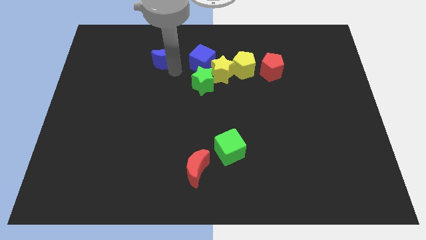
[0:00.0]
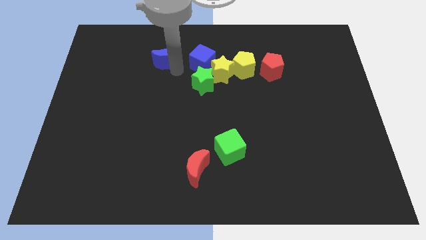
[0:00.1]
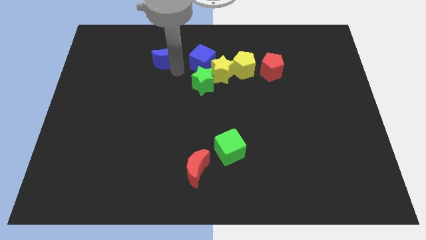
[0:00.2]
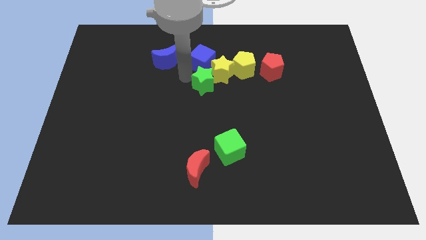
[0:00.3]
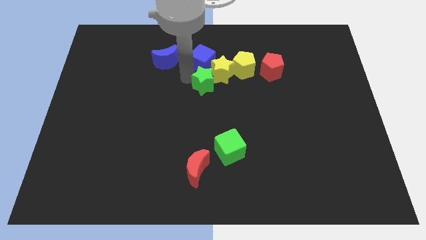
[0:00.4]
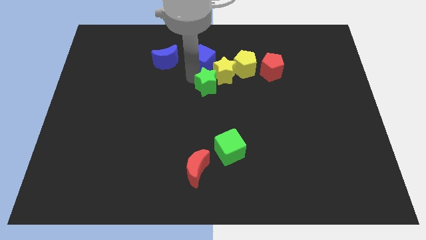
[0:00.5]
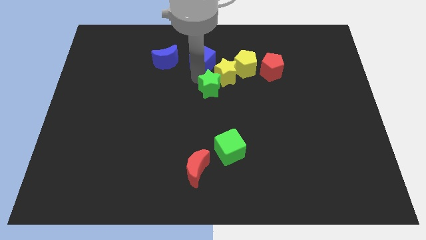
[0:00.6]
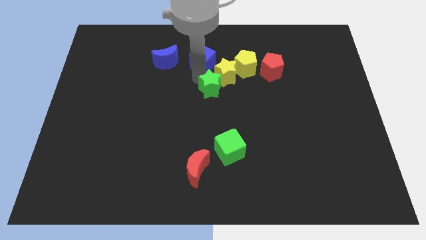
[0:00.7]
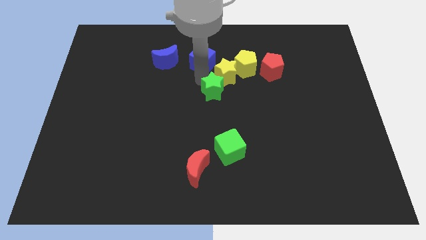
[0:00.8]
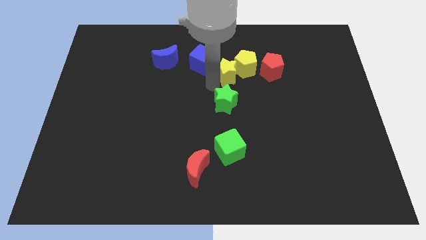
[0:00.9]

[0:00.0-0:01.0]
separate the green star from the yellow star

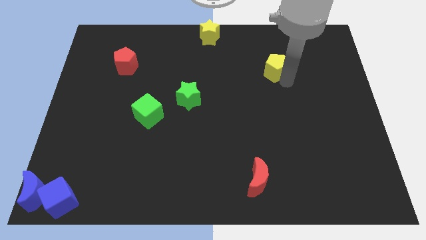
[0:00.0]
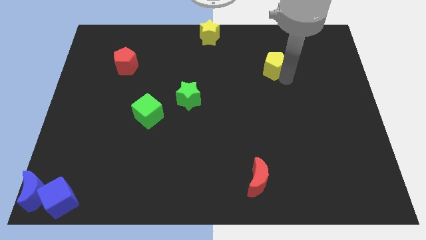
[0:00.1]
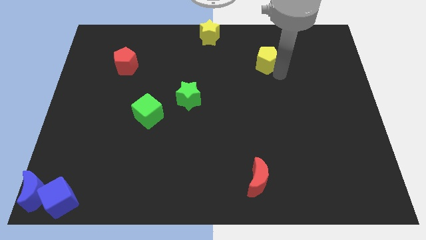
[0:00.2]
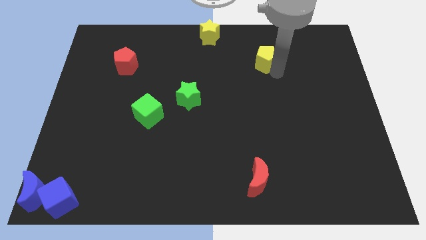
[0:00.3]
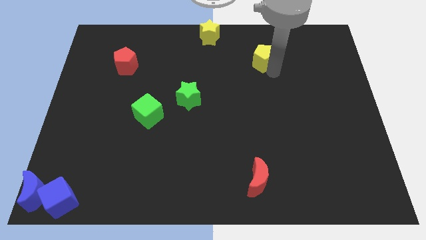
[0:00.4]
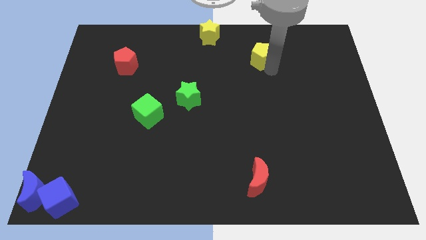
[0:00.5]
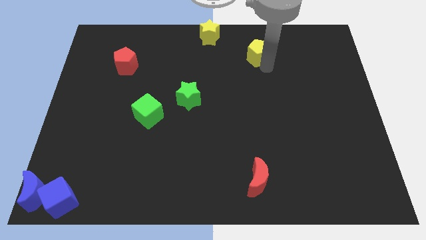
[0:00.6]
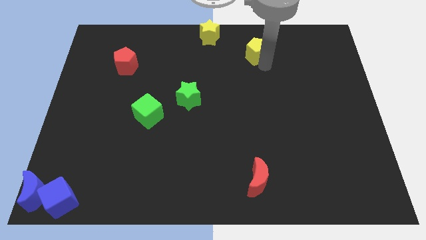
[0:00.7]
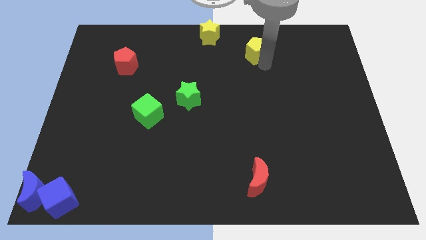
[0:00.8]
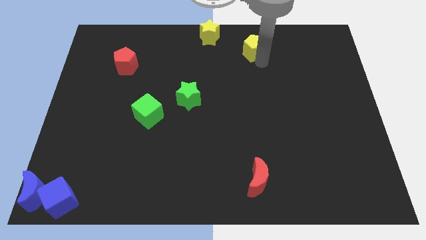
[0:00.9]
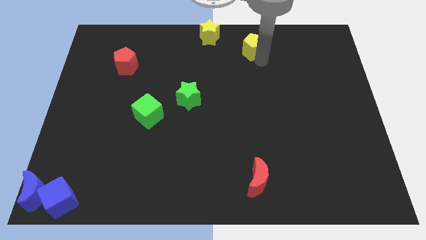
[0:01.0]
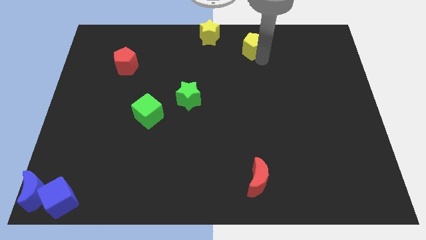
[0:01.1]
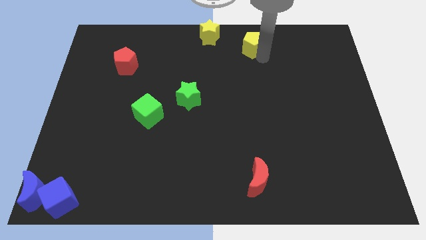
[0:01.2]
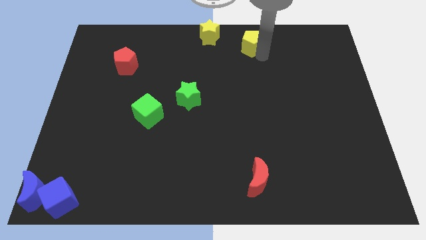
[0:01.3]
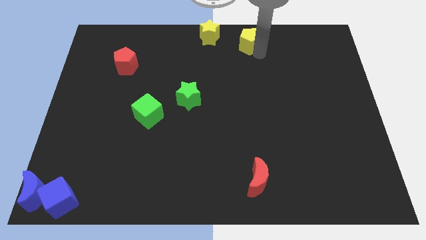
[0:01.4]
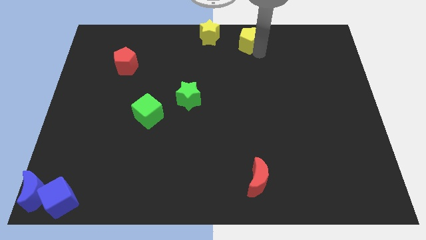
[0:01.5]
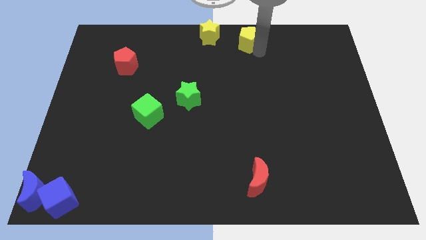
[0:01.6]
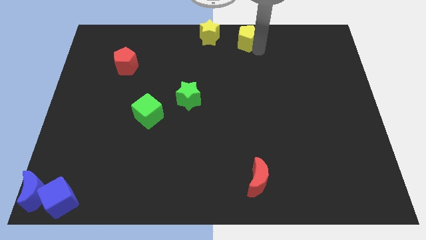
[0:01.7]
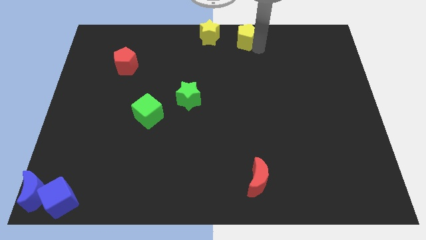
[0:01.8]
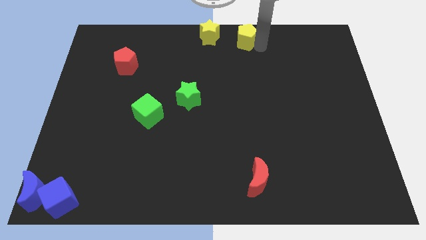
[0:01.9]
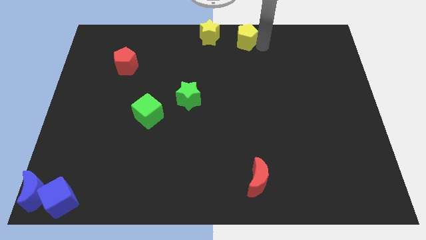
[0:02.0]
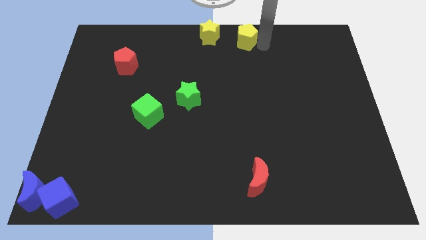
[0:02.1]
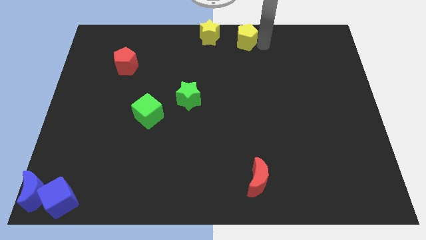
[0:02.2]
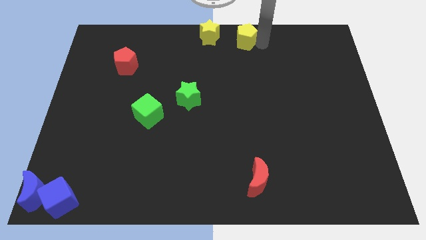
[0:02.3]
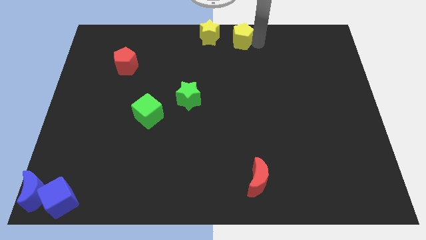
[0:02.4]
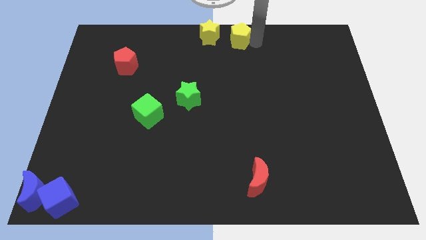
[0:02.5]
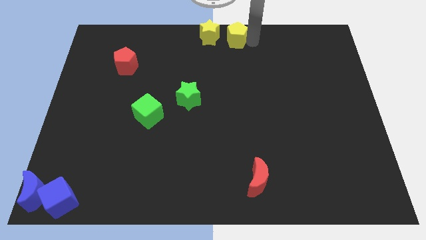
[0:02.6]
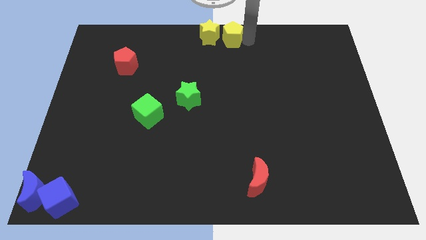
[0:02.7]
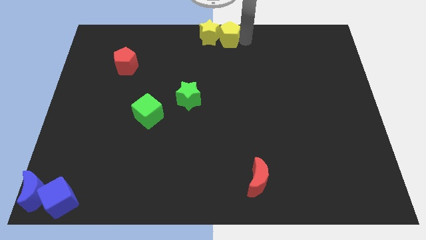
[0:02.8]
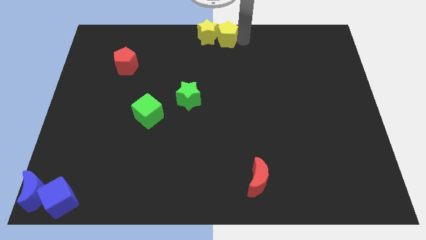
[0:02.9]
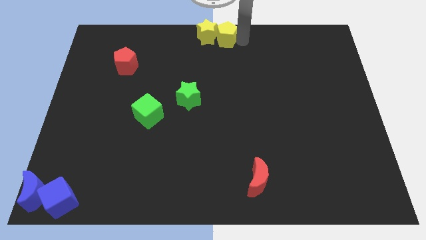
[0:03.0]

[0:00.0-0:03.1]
place the yellow pentagon right side of the yellow star

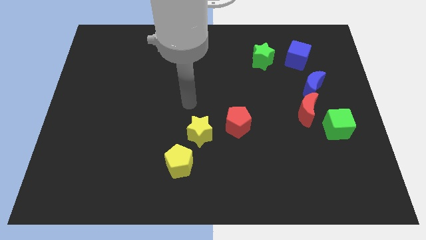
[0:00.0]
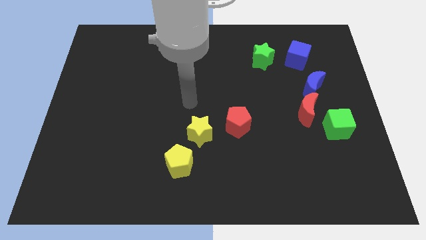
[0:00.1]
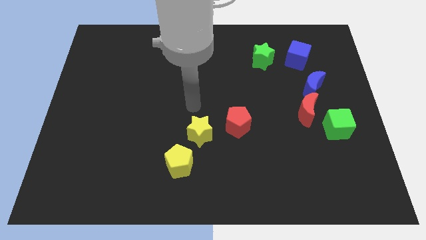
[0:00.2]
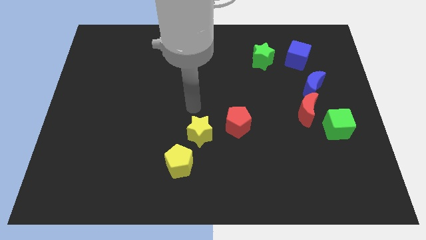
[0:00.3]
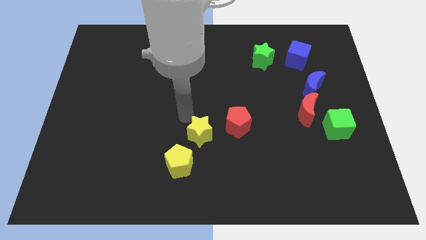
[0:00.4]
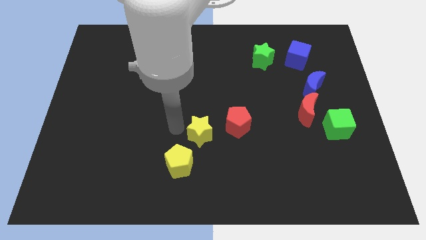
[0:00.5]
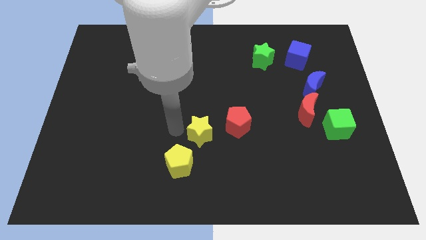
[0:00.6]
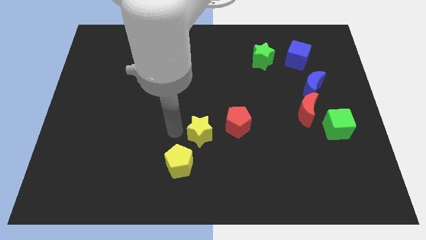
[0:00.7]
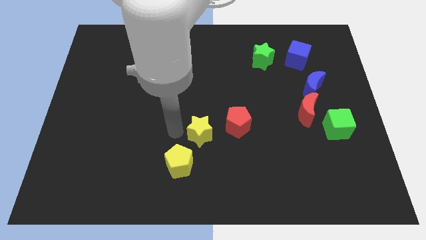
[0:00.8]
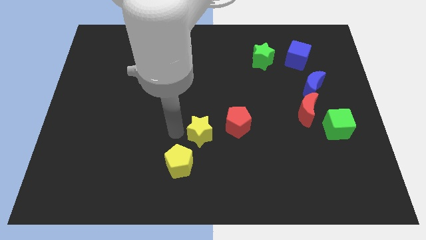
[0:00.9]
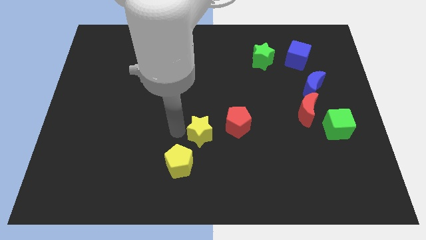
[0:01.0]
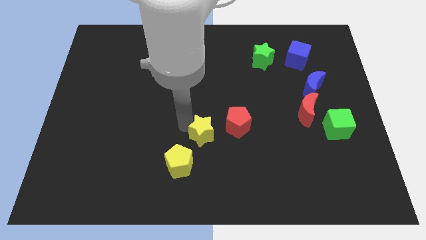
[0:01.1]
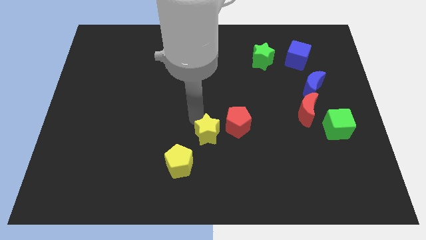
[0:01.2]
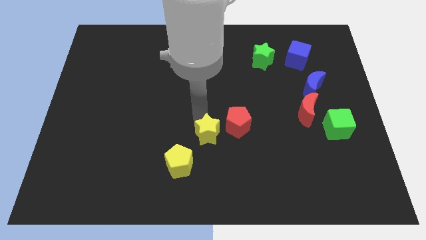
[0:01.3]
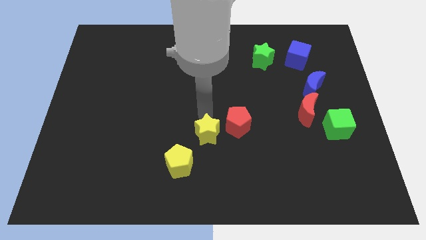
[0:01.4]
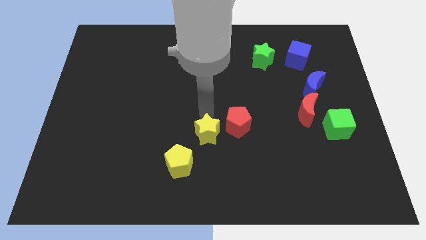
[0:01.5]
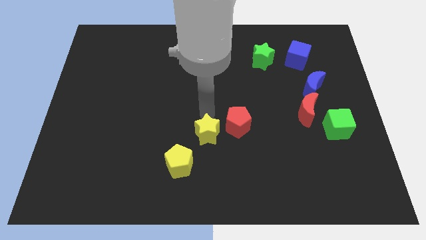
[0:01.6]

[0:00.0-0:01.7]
slightly move the yellow star to the left of the red pentagon

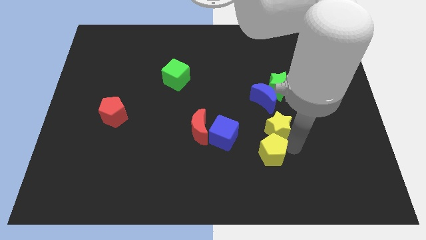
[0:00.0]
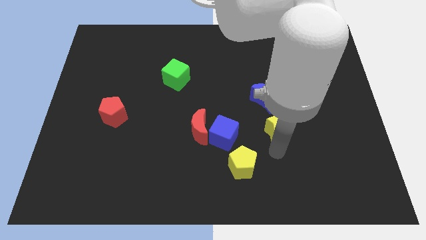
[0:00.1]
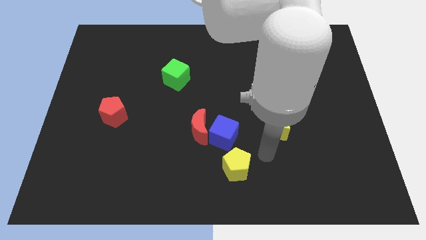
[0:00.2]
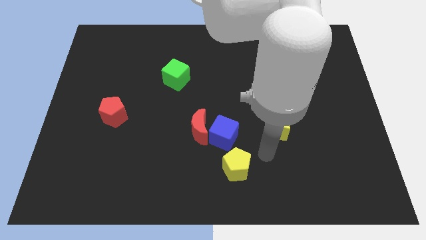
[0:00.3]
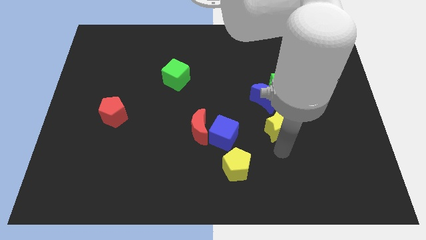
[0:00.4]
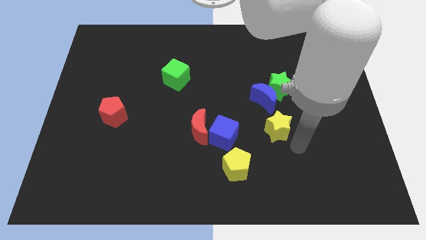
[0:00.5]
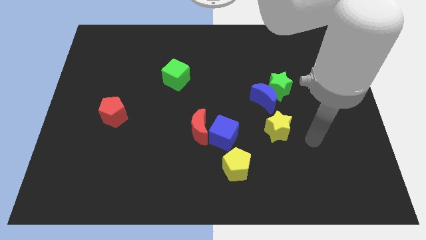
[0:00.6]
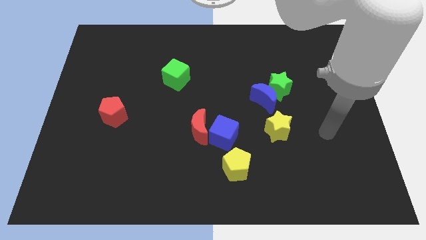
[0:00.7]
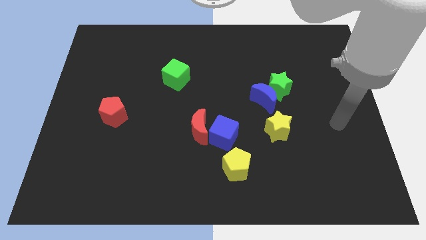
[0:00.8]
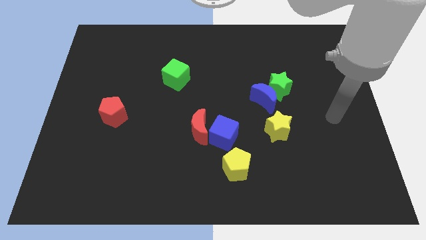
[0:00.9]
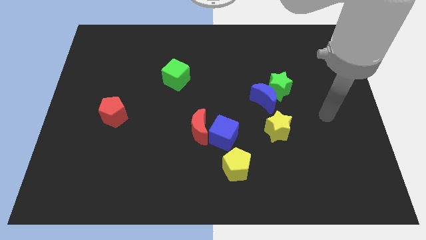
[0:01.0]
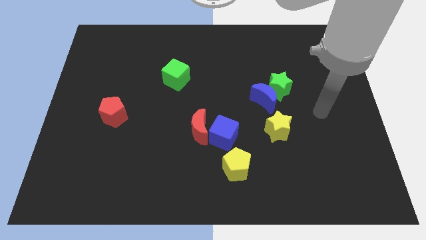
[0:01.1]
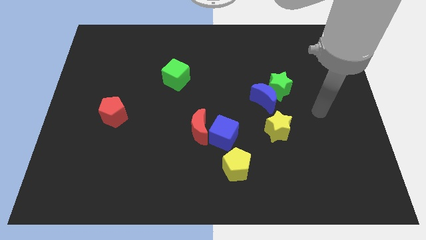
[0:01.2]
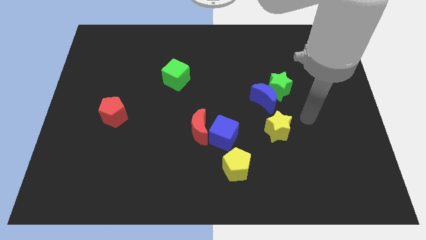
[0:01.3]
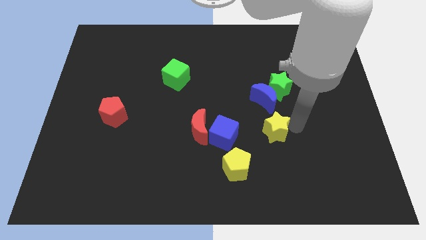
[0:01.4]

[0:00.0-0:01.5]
push the yellow pentagon slightly towards blue cube

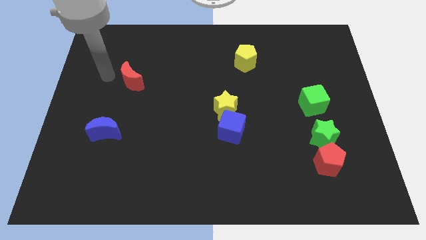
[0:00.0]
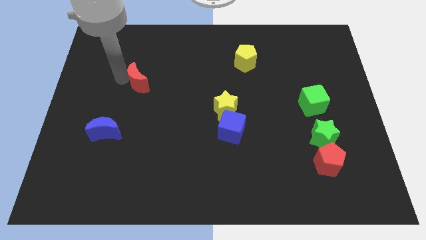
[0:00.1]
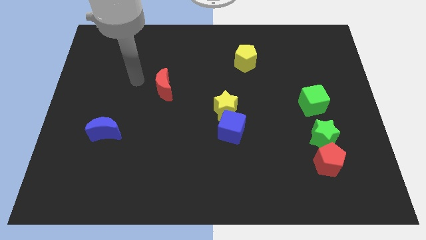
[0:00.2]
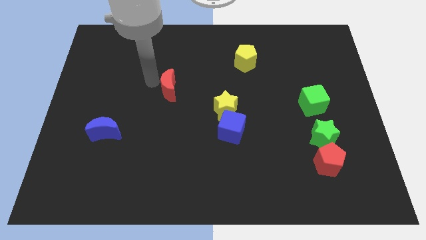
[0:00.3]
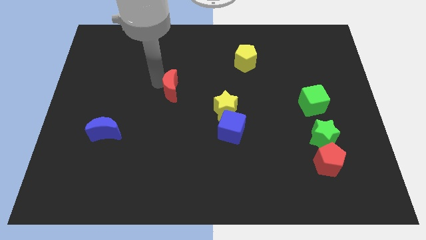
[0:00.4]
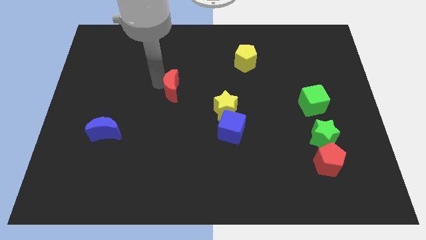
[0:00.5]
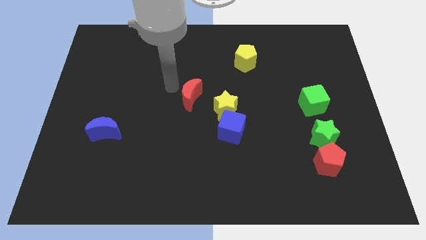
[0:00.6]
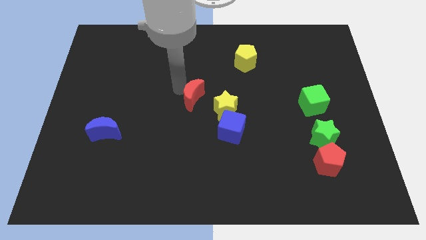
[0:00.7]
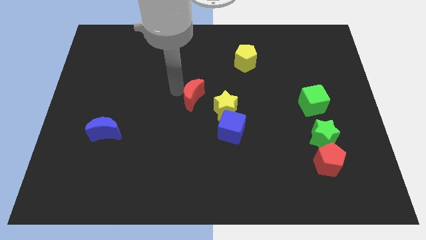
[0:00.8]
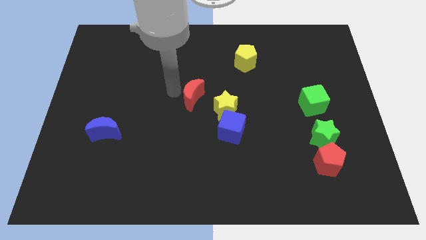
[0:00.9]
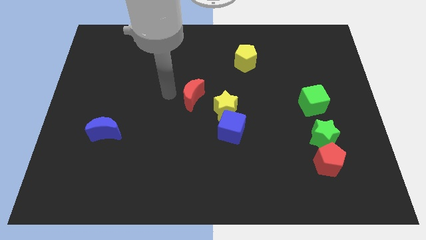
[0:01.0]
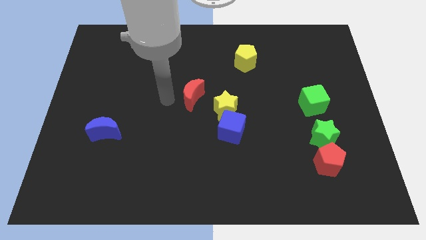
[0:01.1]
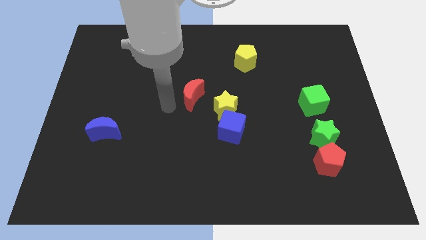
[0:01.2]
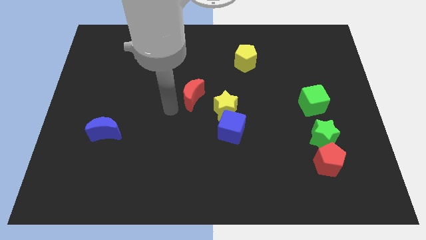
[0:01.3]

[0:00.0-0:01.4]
move the red crescent towards yellow star
